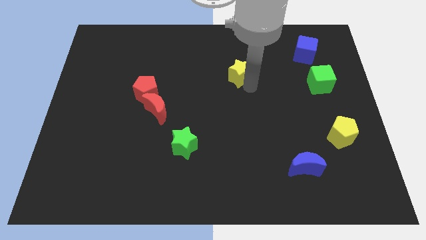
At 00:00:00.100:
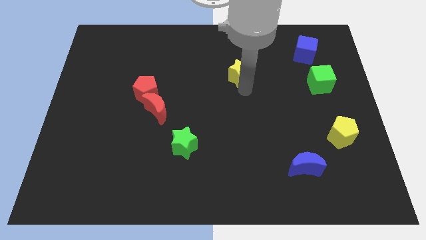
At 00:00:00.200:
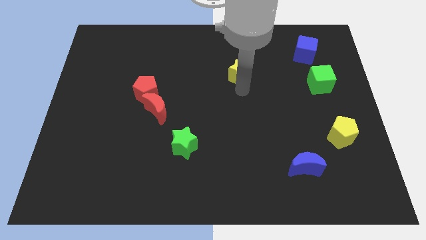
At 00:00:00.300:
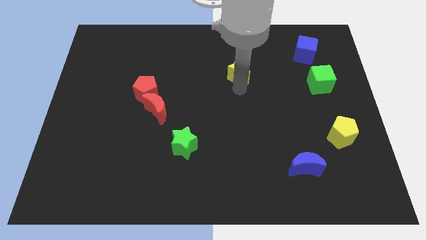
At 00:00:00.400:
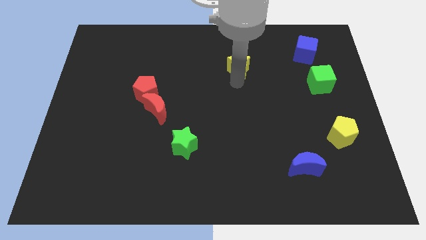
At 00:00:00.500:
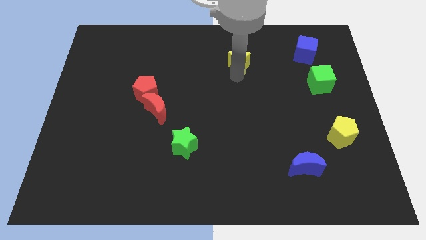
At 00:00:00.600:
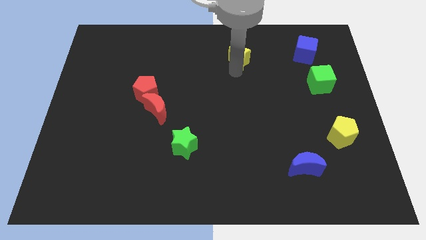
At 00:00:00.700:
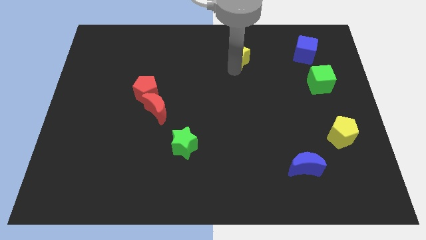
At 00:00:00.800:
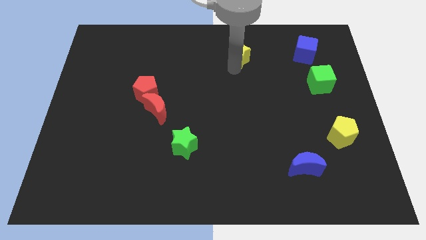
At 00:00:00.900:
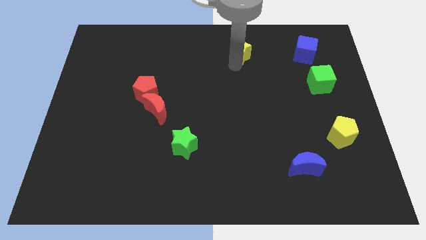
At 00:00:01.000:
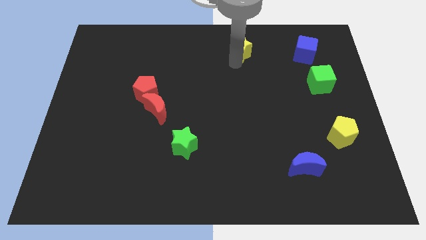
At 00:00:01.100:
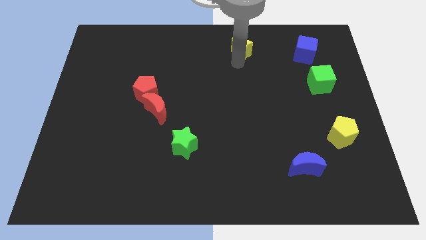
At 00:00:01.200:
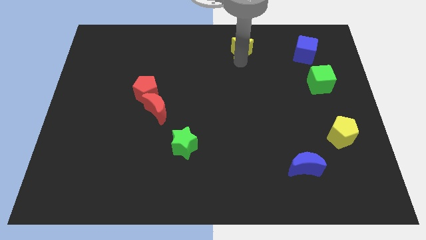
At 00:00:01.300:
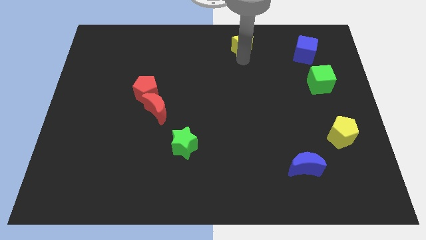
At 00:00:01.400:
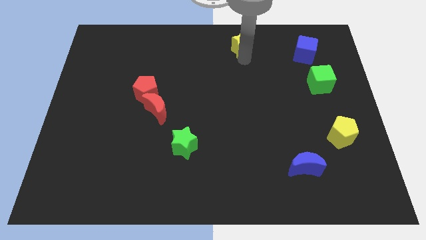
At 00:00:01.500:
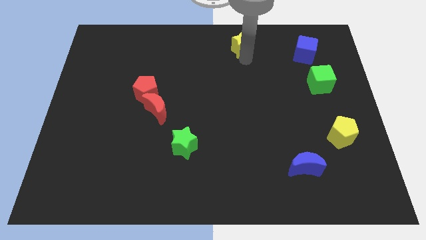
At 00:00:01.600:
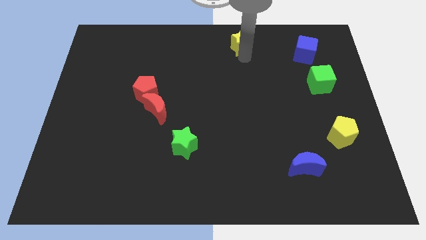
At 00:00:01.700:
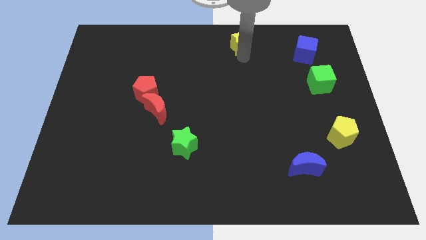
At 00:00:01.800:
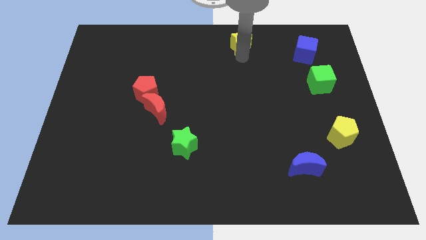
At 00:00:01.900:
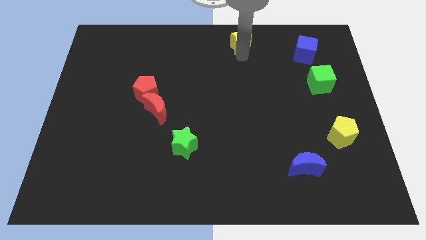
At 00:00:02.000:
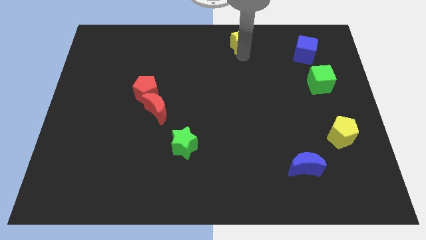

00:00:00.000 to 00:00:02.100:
move the yellow star towards the top

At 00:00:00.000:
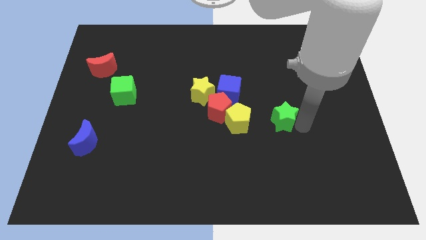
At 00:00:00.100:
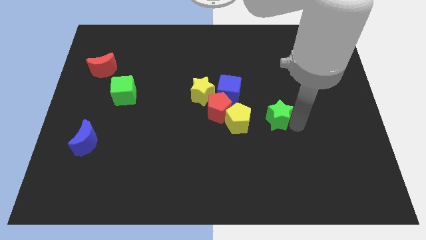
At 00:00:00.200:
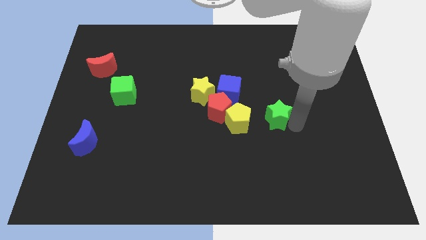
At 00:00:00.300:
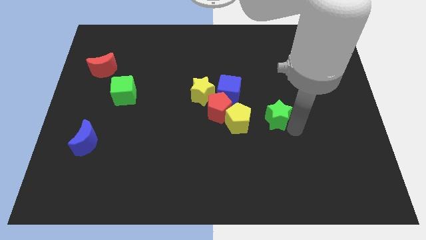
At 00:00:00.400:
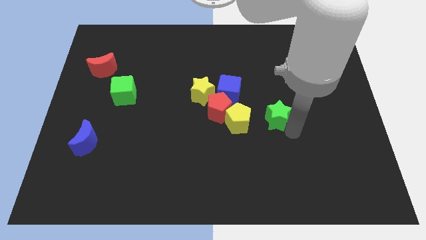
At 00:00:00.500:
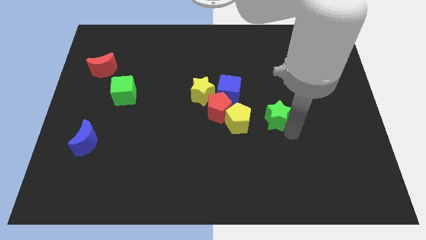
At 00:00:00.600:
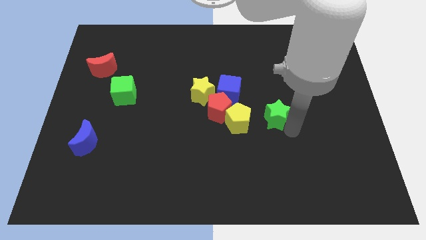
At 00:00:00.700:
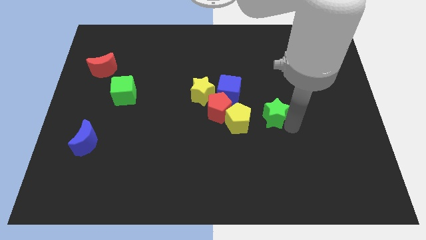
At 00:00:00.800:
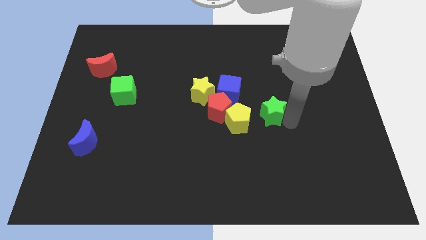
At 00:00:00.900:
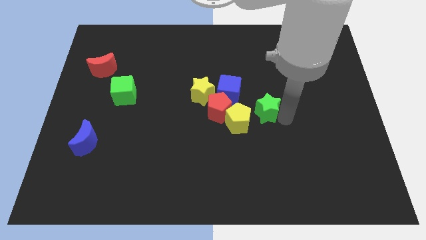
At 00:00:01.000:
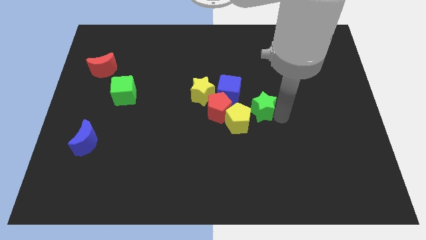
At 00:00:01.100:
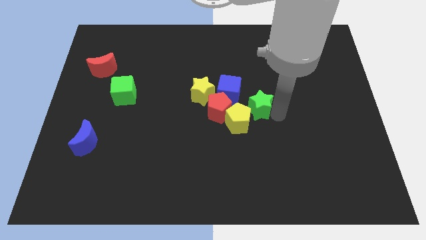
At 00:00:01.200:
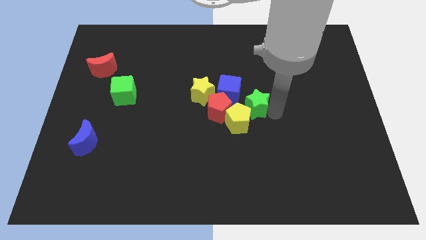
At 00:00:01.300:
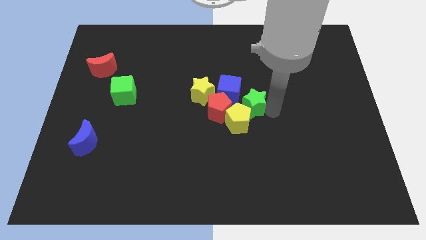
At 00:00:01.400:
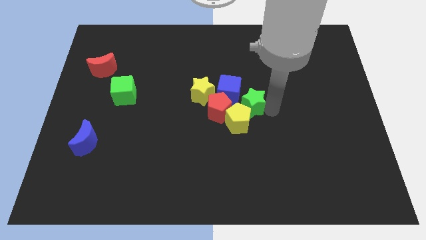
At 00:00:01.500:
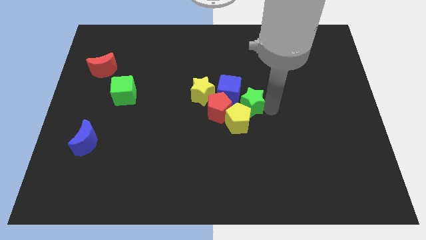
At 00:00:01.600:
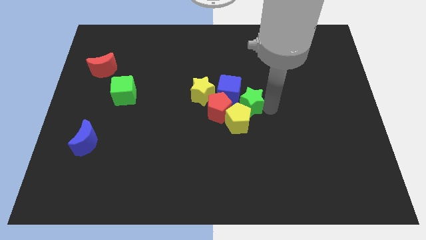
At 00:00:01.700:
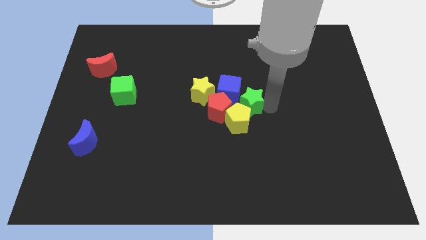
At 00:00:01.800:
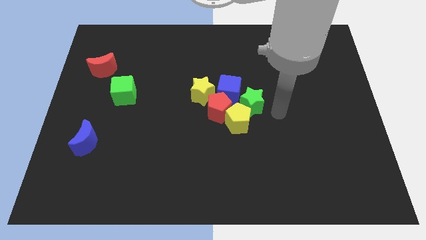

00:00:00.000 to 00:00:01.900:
move the green star below right to the blue cube

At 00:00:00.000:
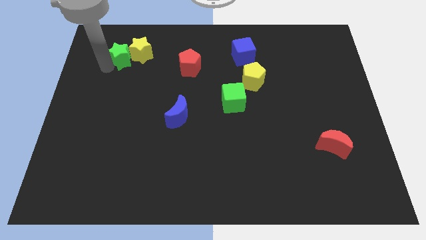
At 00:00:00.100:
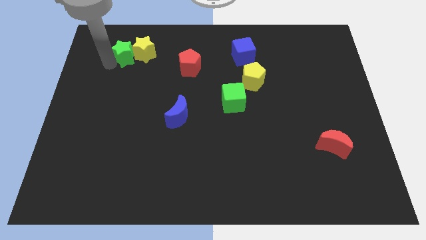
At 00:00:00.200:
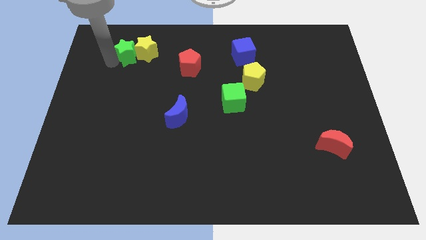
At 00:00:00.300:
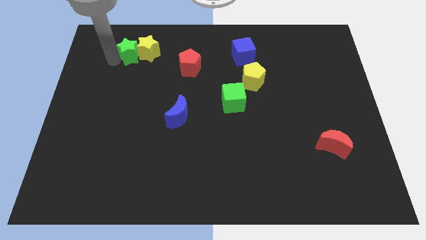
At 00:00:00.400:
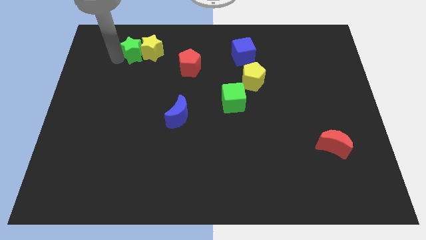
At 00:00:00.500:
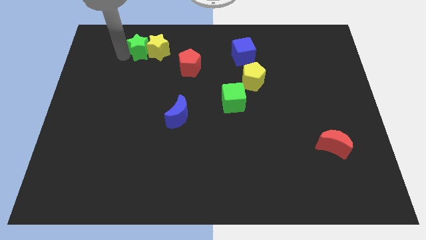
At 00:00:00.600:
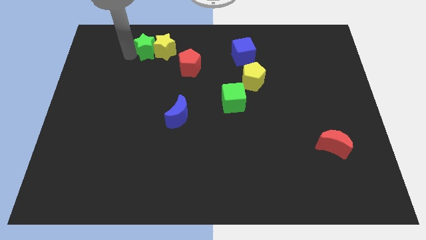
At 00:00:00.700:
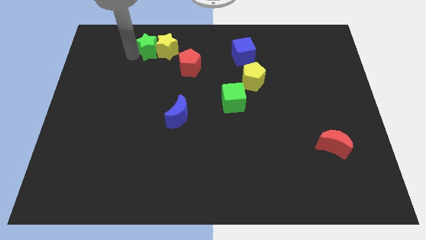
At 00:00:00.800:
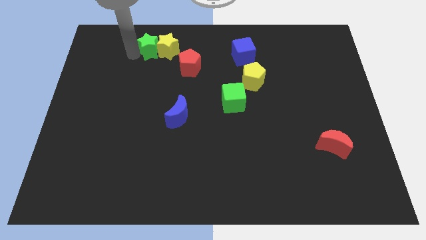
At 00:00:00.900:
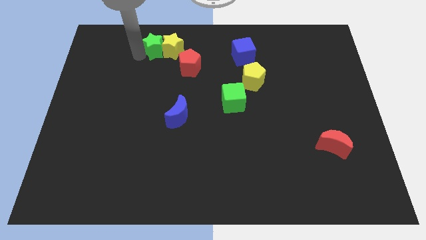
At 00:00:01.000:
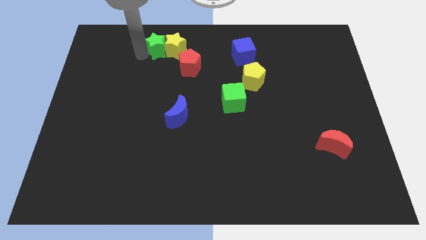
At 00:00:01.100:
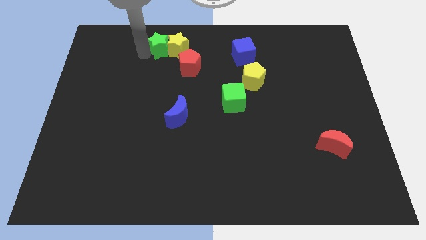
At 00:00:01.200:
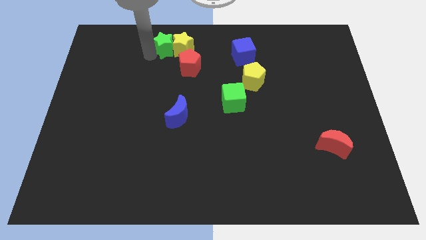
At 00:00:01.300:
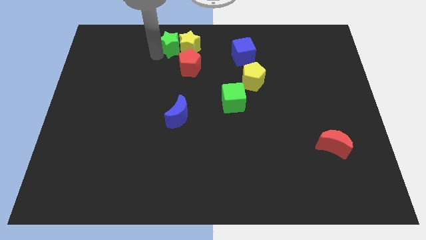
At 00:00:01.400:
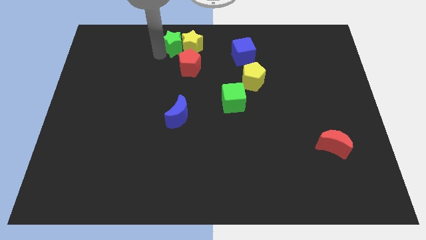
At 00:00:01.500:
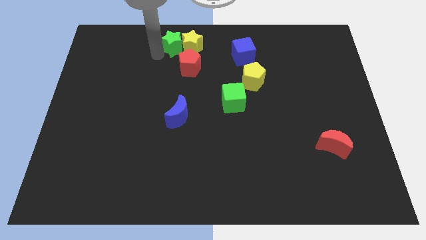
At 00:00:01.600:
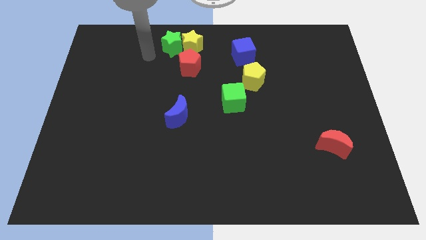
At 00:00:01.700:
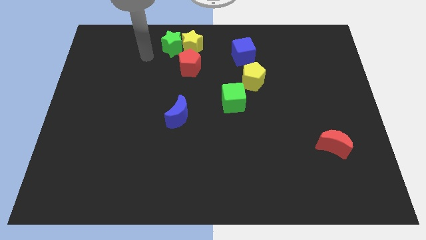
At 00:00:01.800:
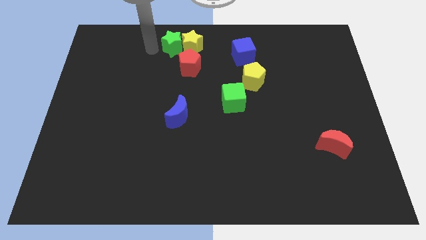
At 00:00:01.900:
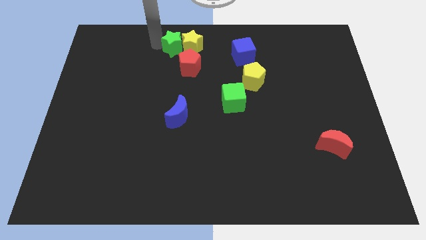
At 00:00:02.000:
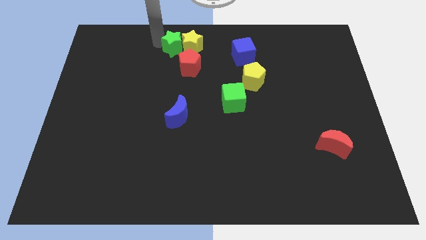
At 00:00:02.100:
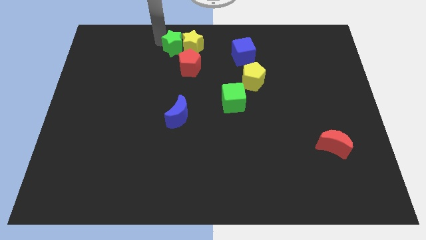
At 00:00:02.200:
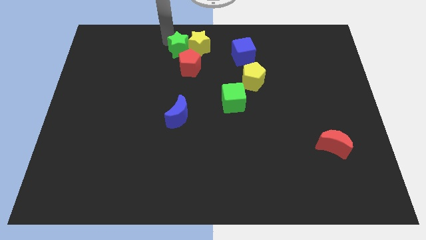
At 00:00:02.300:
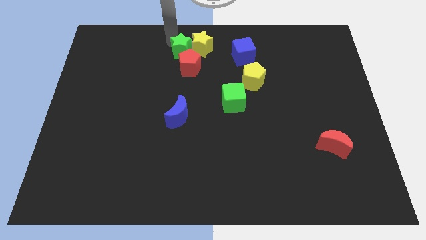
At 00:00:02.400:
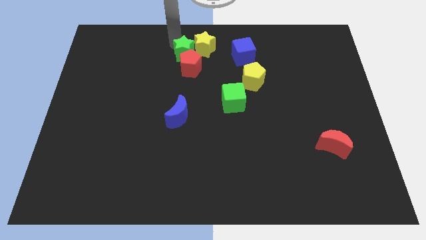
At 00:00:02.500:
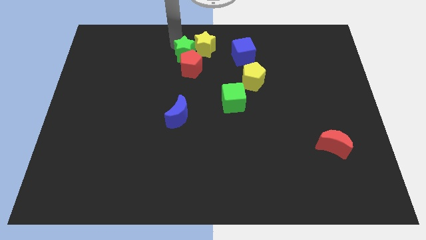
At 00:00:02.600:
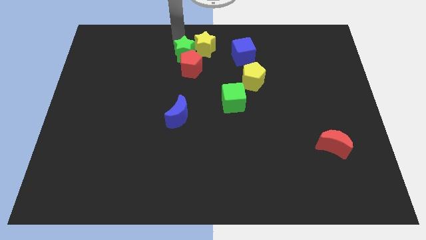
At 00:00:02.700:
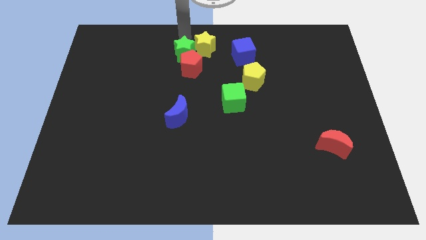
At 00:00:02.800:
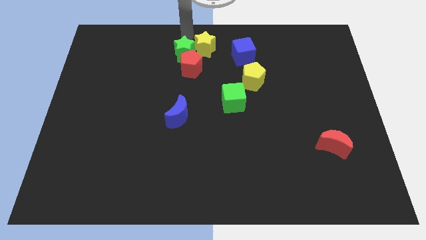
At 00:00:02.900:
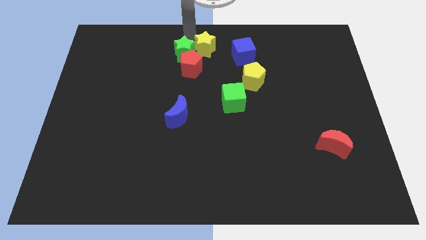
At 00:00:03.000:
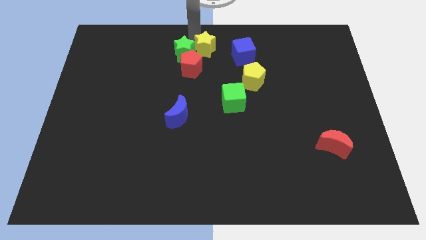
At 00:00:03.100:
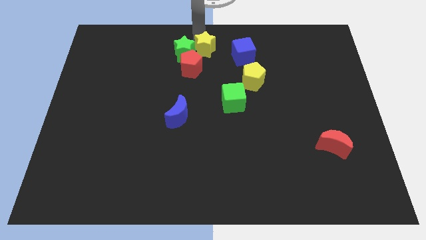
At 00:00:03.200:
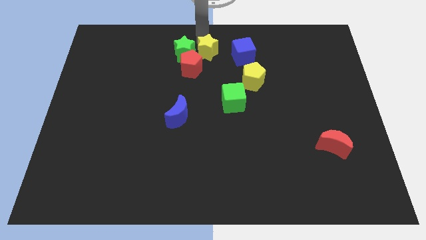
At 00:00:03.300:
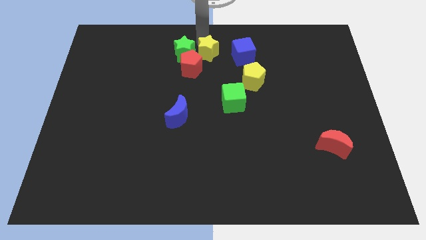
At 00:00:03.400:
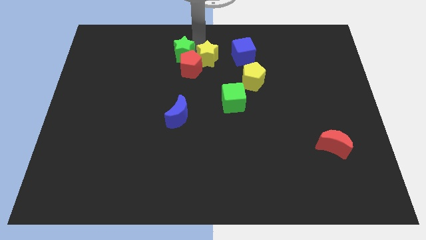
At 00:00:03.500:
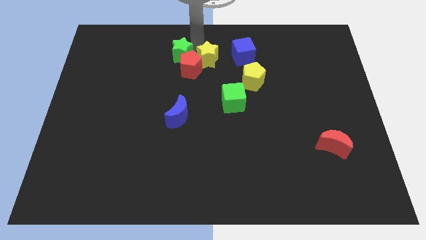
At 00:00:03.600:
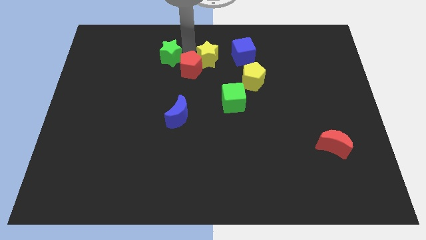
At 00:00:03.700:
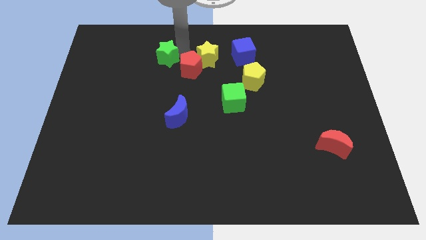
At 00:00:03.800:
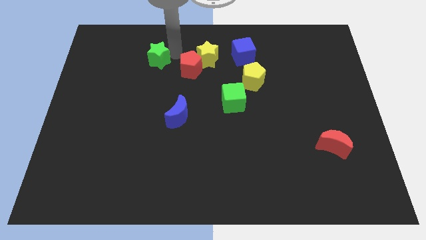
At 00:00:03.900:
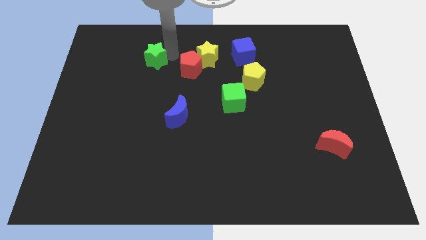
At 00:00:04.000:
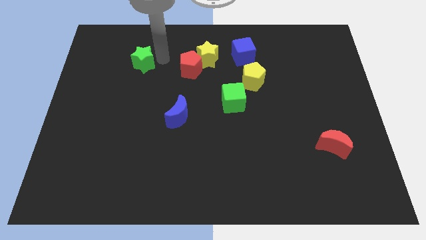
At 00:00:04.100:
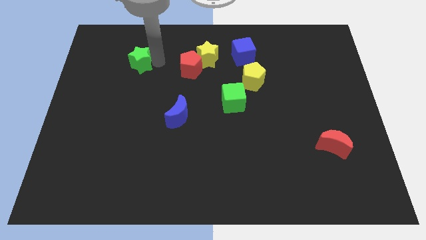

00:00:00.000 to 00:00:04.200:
separate the green and yellow stars

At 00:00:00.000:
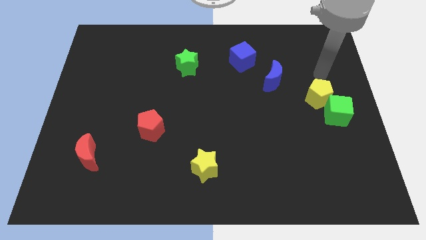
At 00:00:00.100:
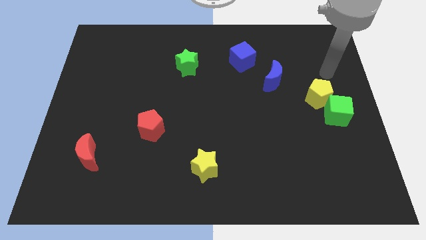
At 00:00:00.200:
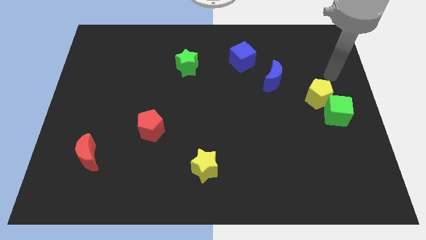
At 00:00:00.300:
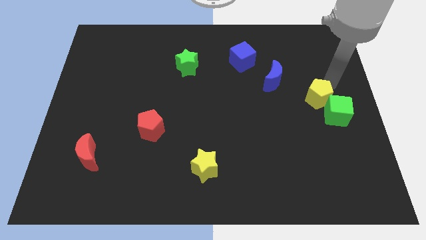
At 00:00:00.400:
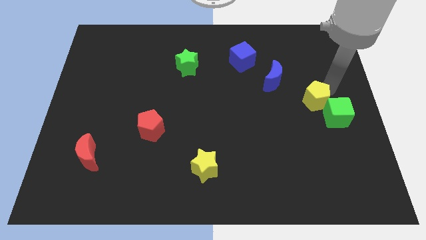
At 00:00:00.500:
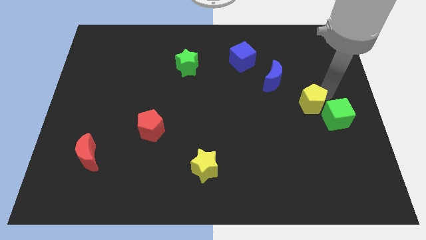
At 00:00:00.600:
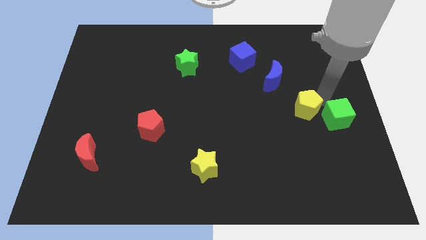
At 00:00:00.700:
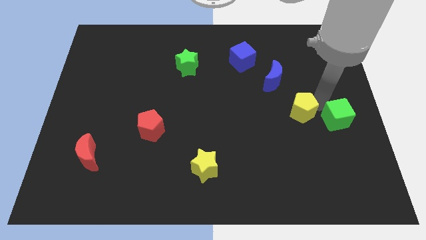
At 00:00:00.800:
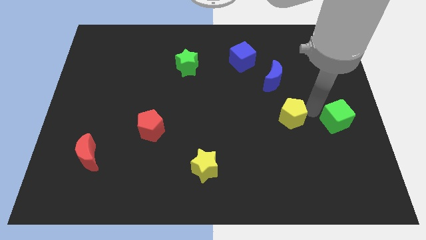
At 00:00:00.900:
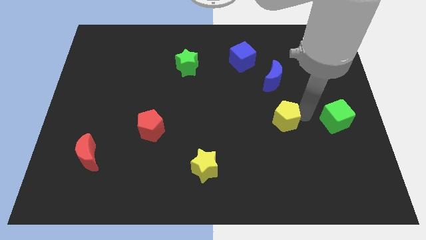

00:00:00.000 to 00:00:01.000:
separate the yellow pentagon from the green cube
